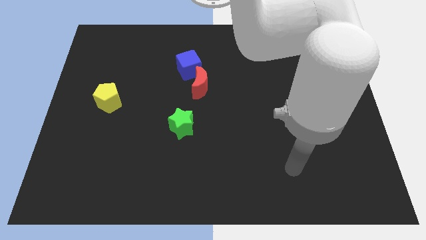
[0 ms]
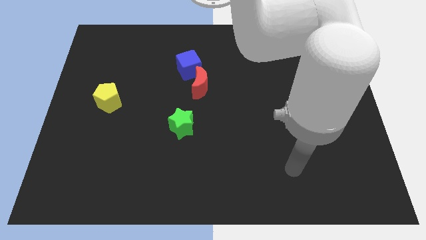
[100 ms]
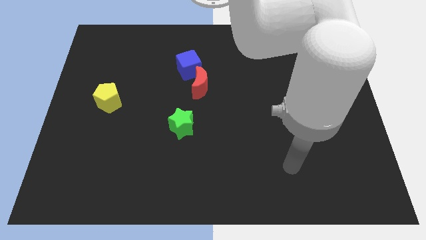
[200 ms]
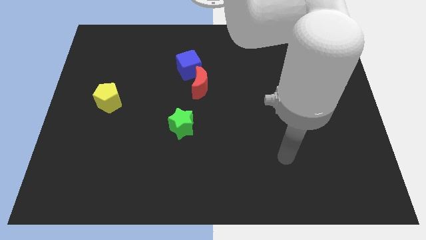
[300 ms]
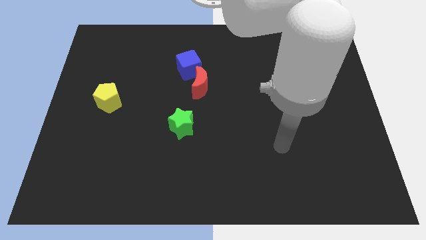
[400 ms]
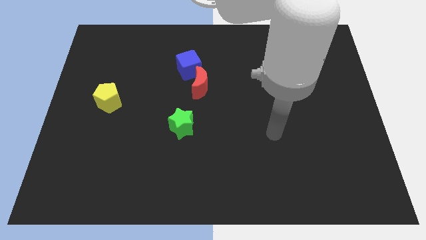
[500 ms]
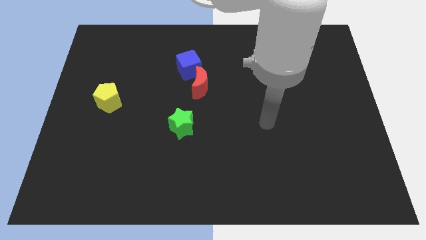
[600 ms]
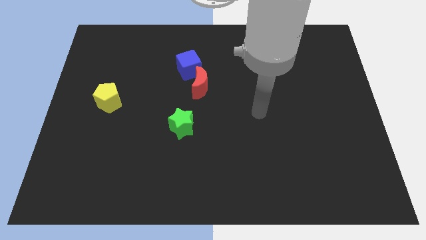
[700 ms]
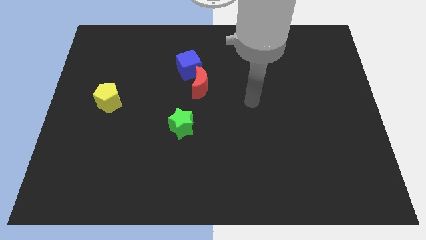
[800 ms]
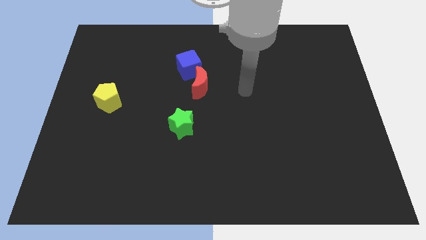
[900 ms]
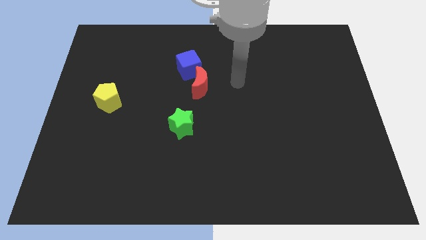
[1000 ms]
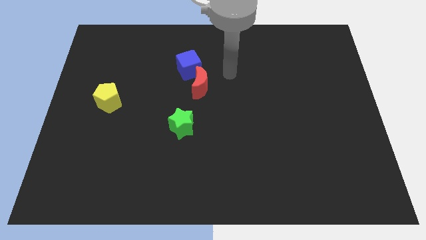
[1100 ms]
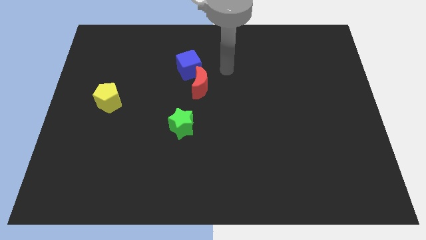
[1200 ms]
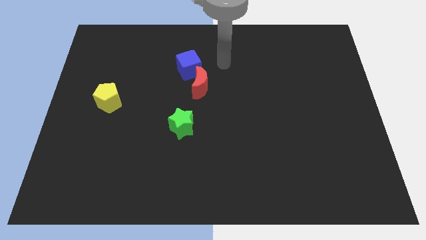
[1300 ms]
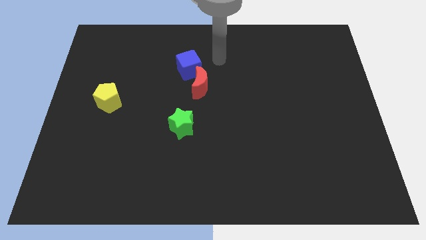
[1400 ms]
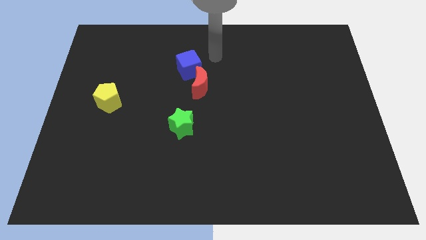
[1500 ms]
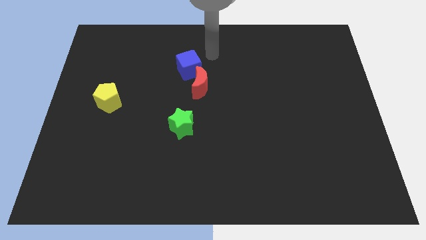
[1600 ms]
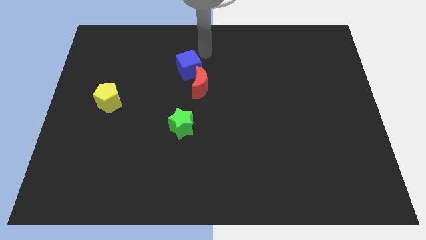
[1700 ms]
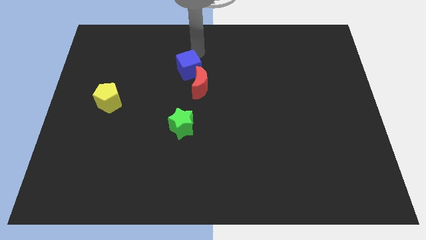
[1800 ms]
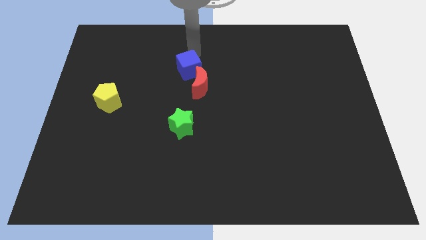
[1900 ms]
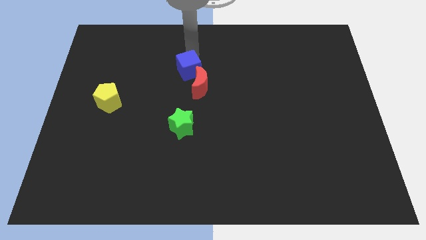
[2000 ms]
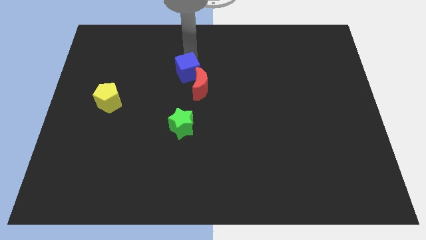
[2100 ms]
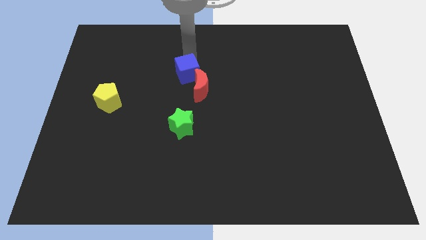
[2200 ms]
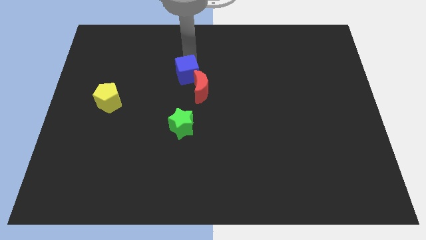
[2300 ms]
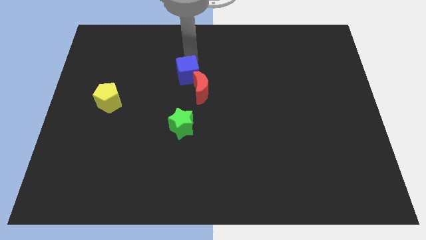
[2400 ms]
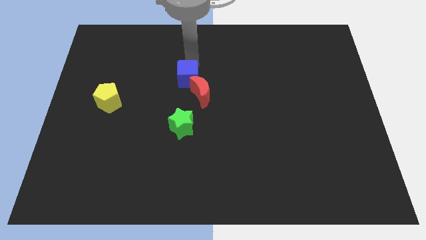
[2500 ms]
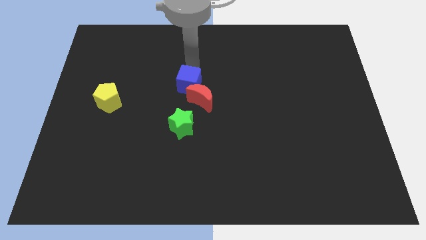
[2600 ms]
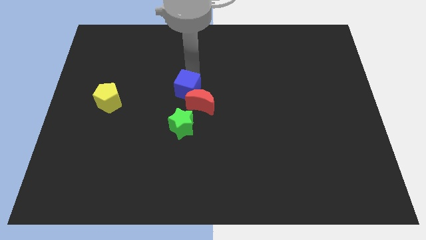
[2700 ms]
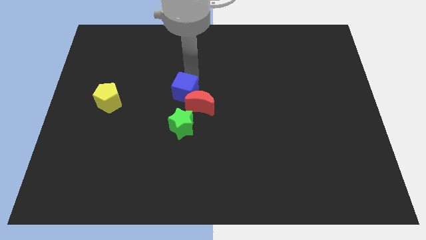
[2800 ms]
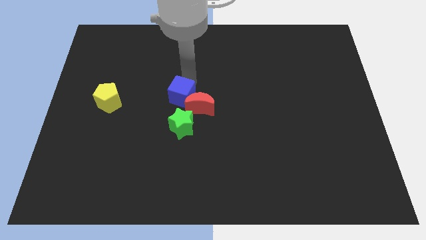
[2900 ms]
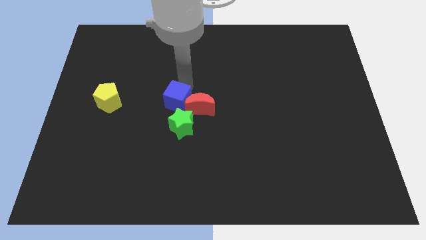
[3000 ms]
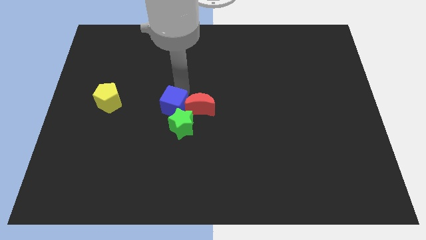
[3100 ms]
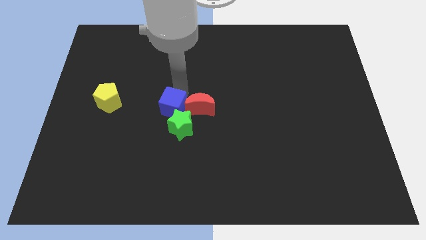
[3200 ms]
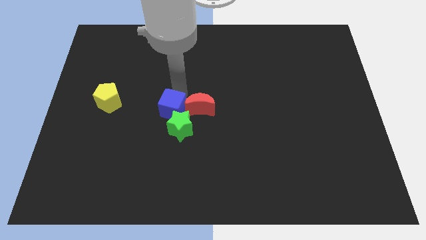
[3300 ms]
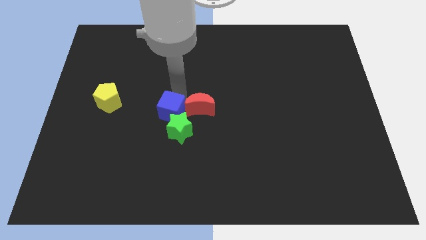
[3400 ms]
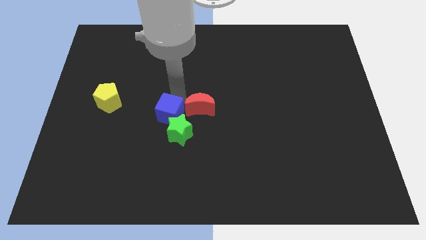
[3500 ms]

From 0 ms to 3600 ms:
push the cube to the green star

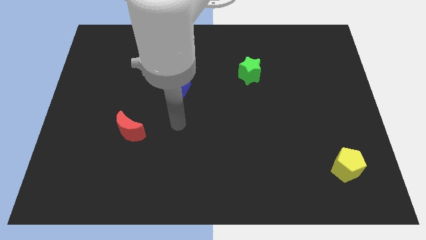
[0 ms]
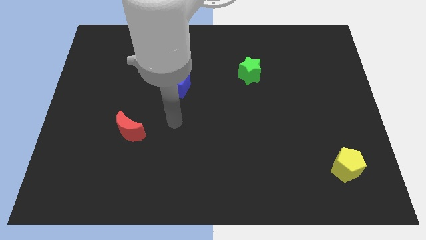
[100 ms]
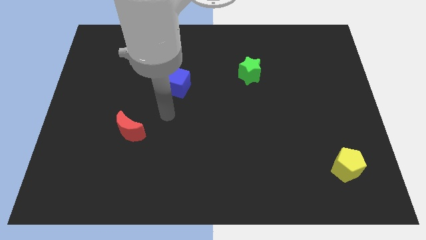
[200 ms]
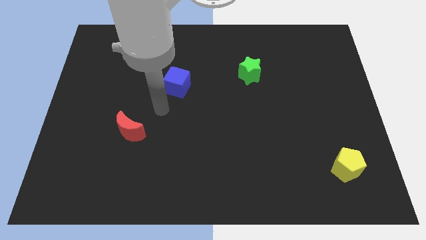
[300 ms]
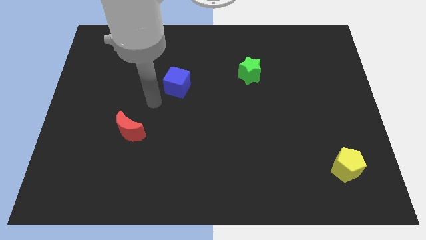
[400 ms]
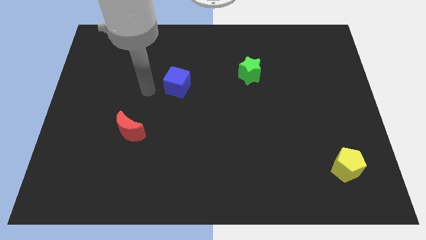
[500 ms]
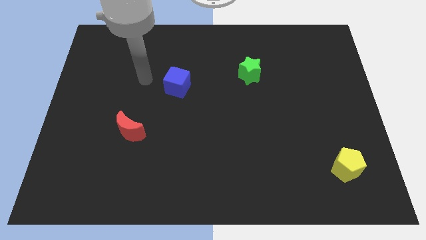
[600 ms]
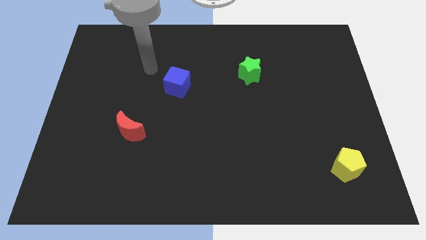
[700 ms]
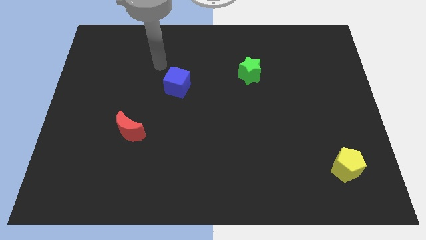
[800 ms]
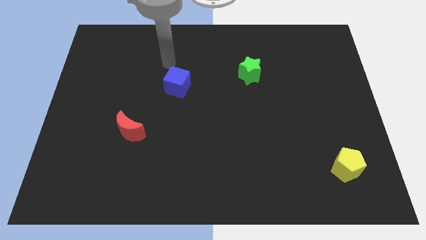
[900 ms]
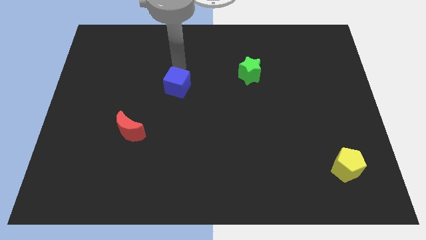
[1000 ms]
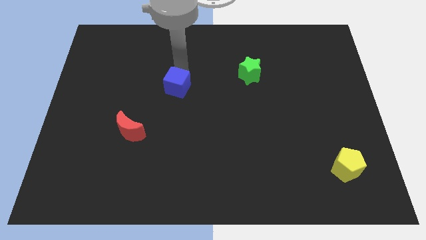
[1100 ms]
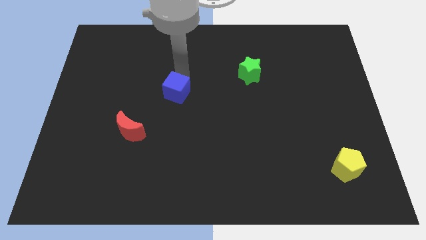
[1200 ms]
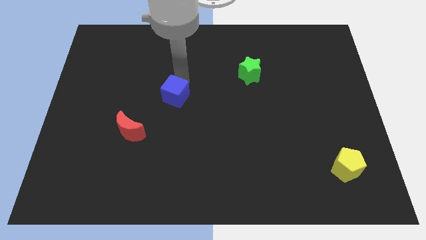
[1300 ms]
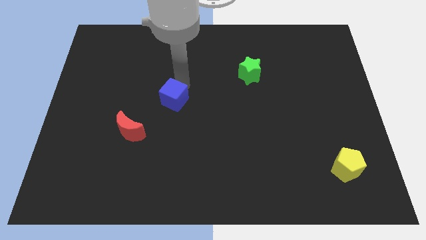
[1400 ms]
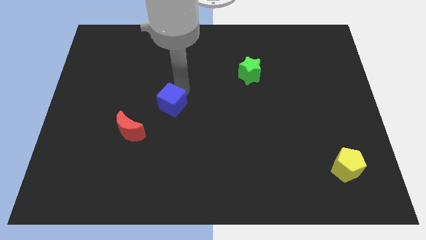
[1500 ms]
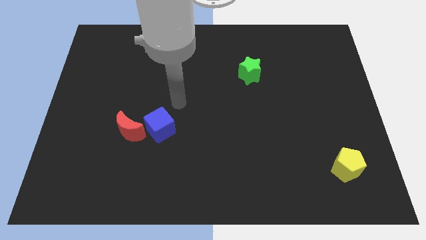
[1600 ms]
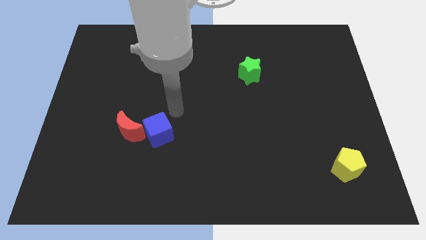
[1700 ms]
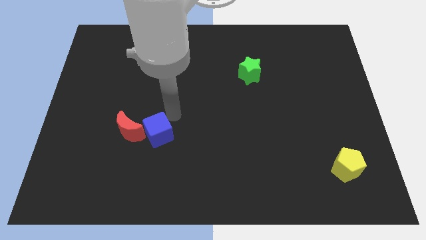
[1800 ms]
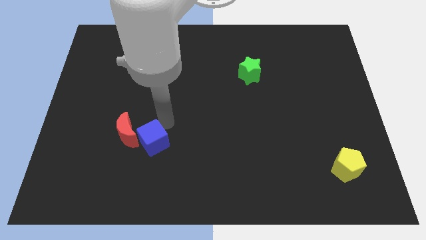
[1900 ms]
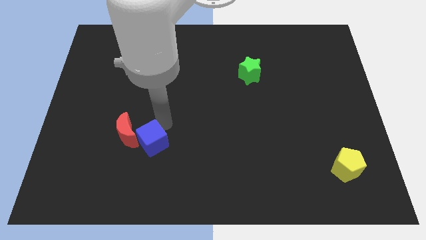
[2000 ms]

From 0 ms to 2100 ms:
put the blue block close to the moon

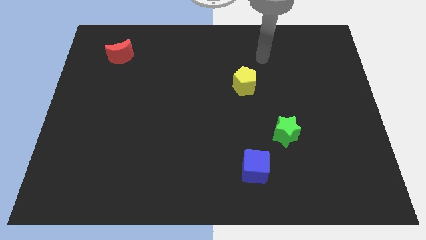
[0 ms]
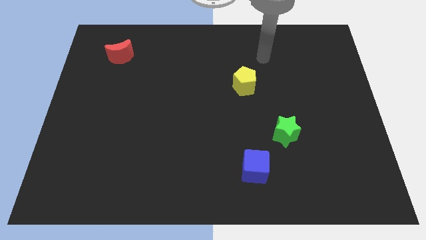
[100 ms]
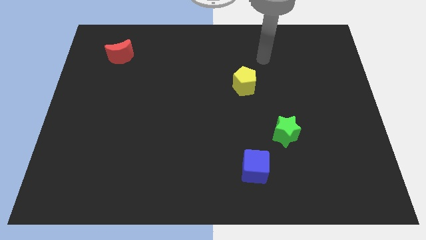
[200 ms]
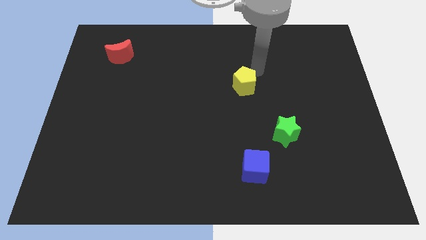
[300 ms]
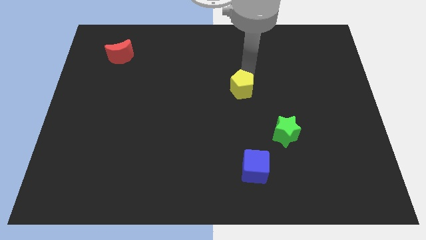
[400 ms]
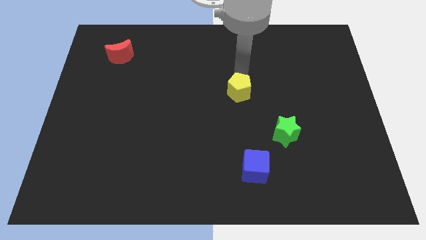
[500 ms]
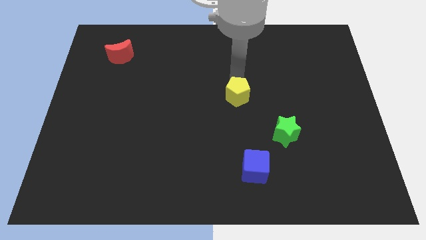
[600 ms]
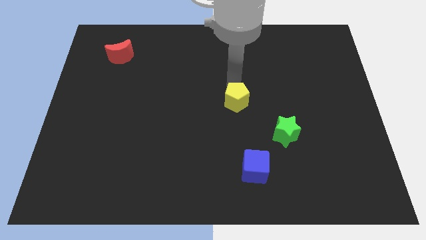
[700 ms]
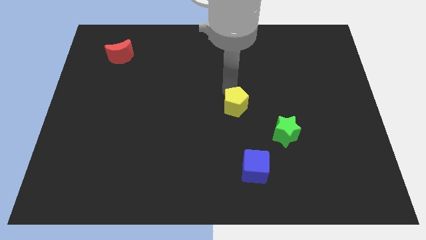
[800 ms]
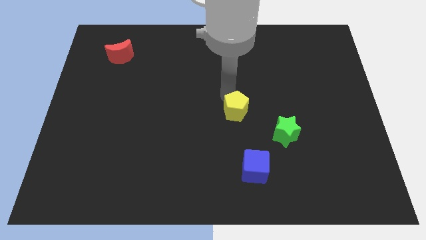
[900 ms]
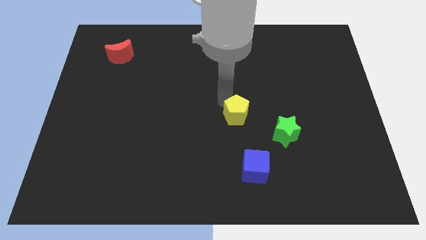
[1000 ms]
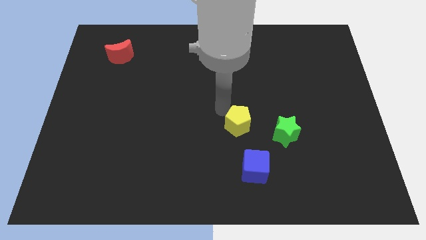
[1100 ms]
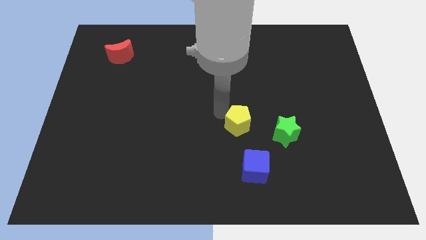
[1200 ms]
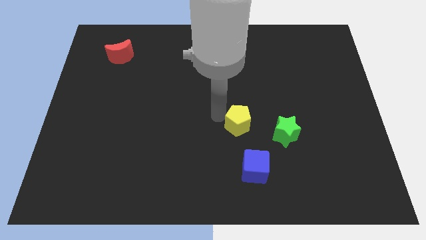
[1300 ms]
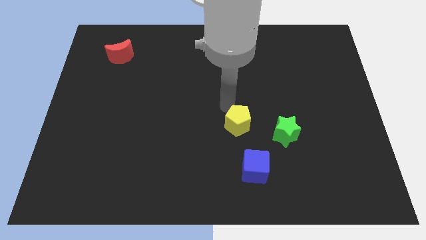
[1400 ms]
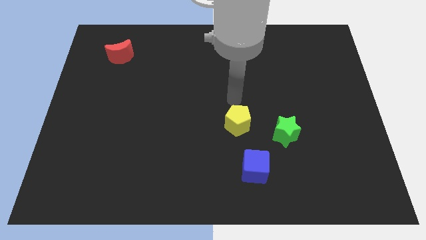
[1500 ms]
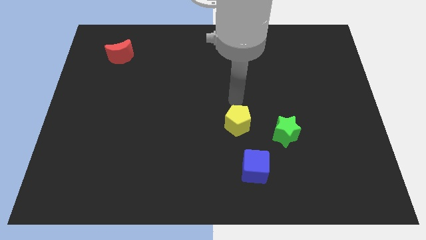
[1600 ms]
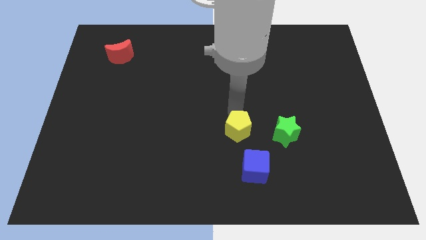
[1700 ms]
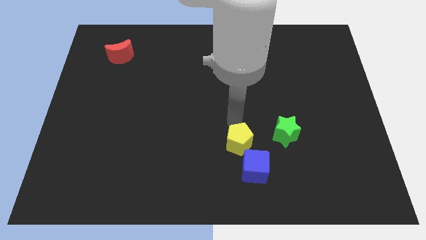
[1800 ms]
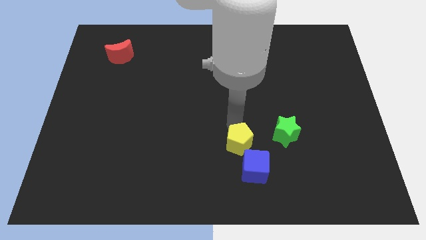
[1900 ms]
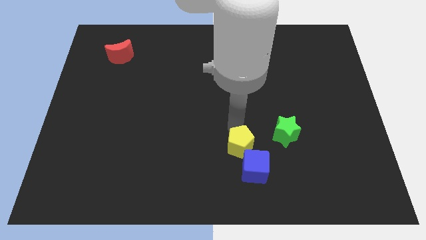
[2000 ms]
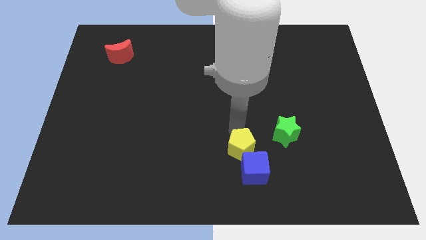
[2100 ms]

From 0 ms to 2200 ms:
slide the pentagon next to the cube

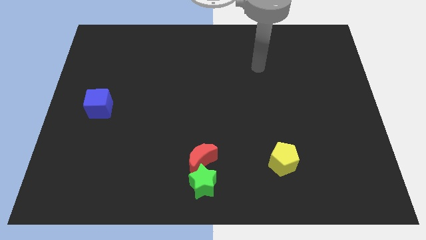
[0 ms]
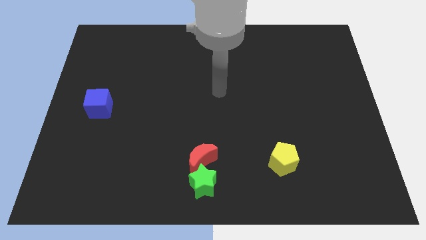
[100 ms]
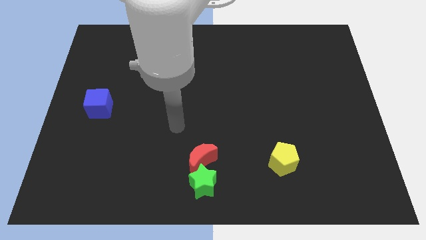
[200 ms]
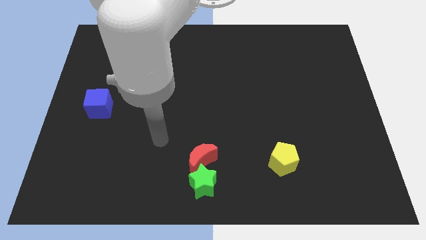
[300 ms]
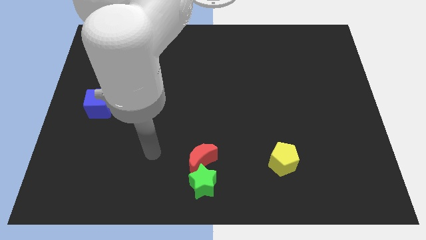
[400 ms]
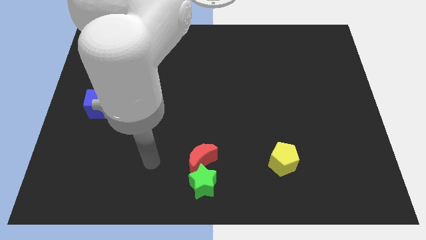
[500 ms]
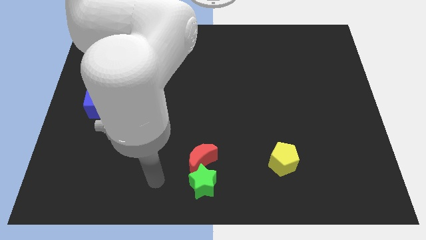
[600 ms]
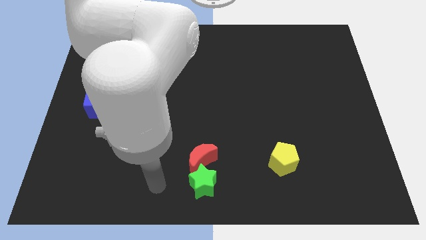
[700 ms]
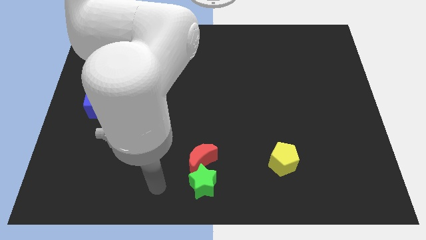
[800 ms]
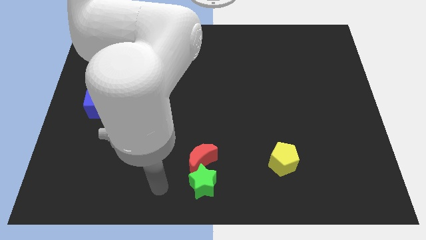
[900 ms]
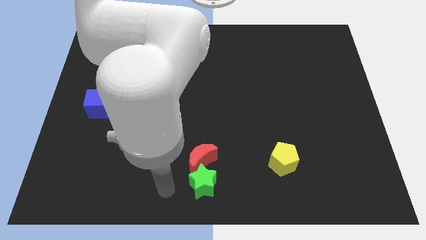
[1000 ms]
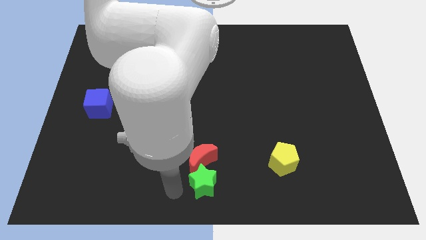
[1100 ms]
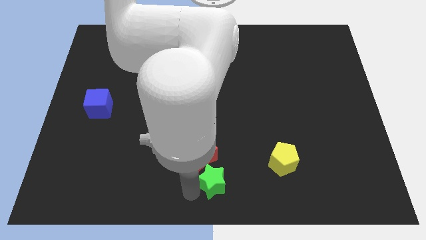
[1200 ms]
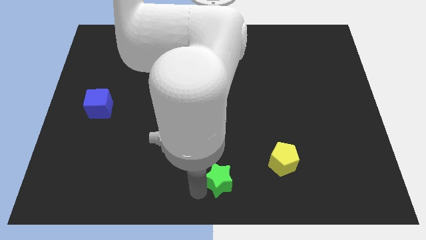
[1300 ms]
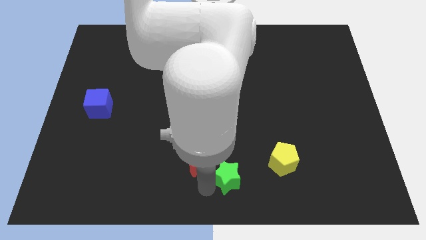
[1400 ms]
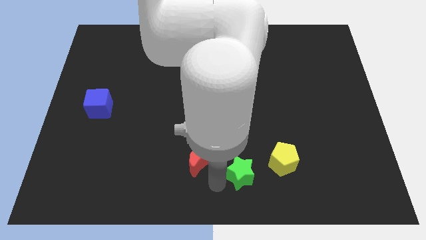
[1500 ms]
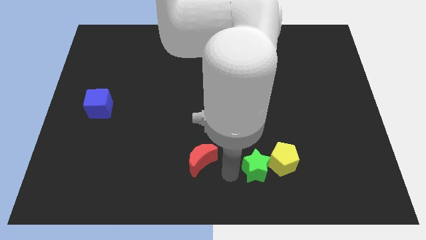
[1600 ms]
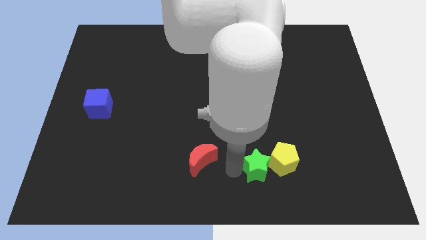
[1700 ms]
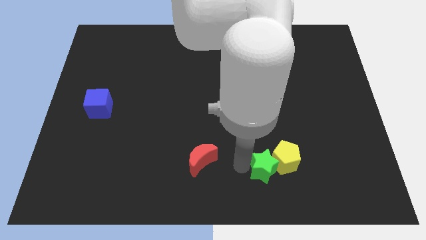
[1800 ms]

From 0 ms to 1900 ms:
move the star towards the yellow block
